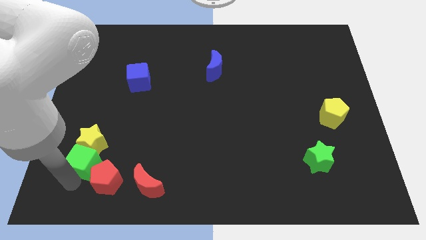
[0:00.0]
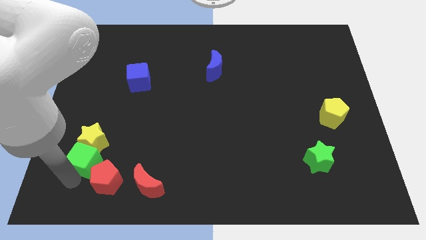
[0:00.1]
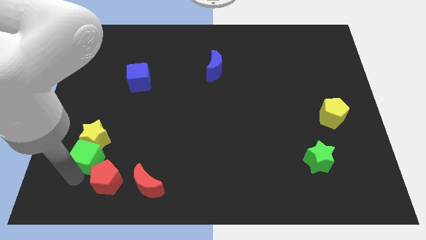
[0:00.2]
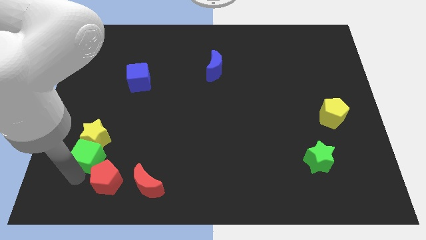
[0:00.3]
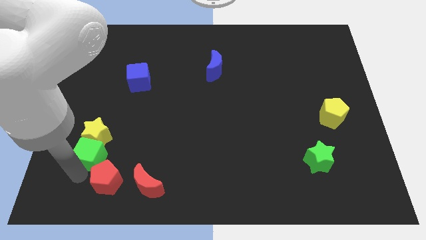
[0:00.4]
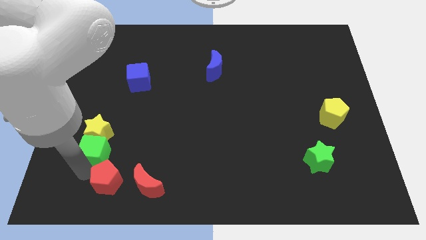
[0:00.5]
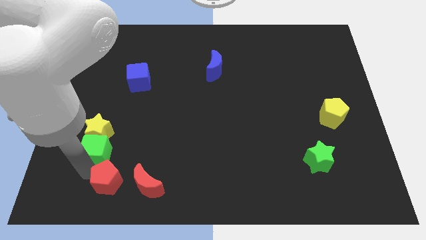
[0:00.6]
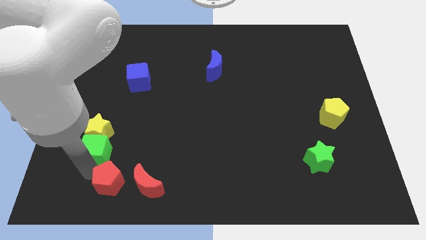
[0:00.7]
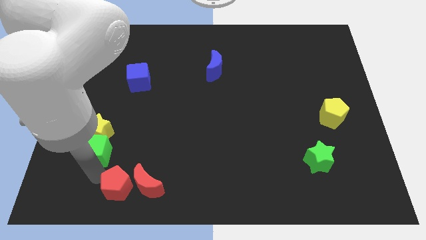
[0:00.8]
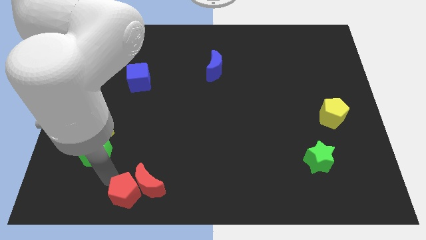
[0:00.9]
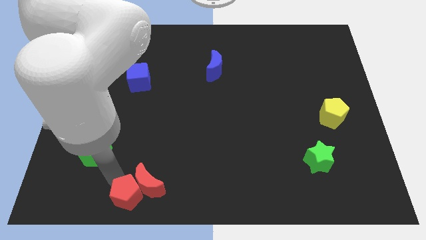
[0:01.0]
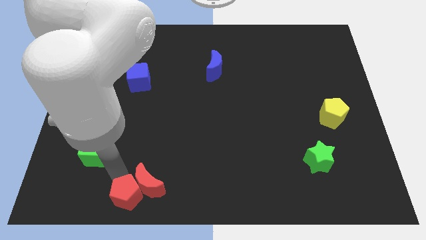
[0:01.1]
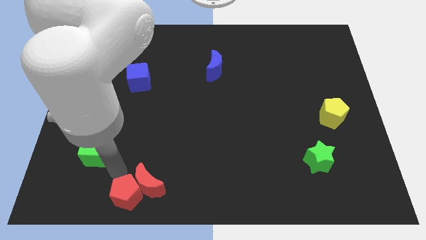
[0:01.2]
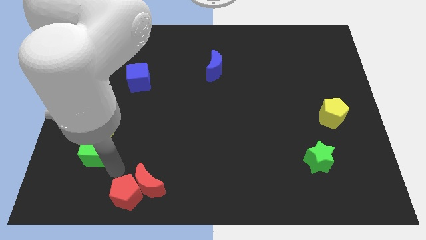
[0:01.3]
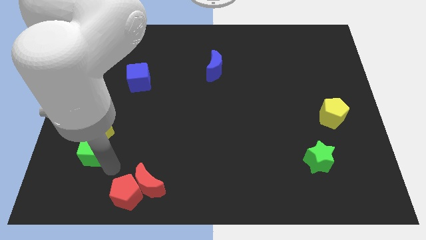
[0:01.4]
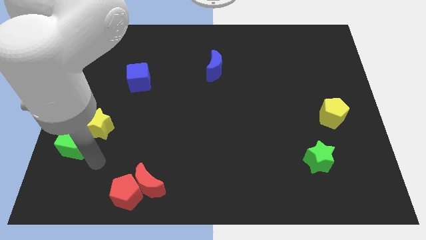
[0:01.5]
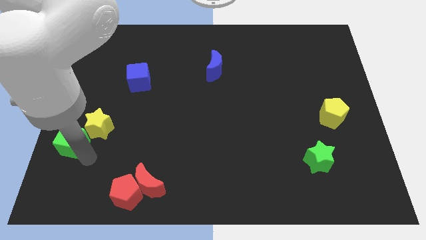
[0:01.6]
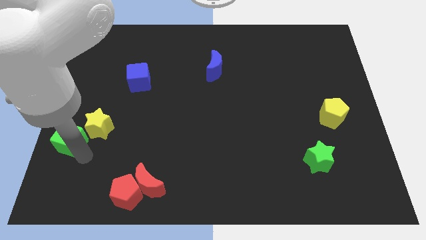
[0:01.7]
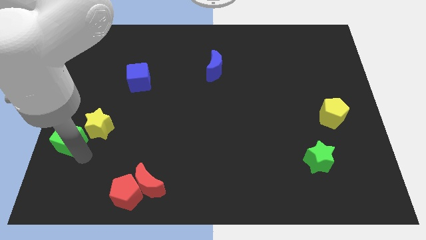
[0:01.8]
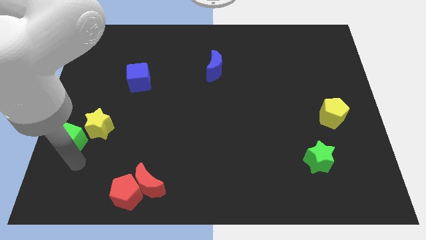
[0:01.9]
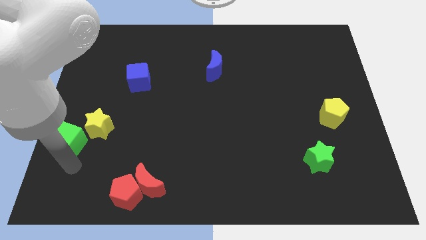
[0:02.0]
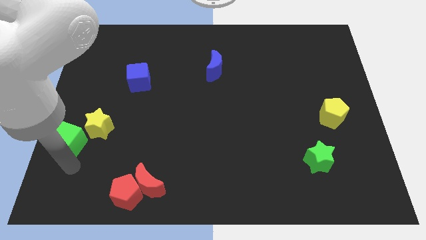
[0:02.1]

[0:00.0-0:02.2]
push the red pentagon into the red moon

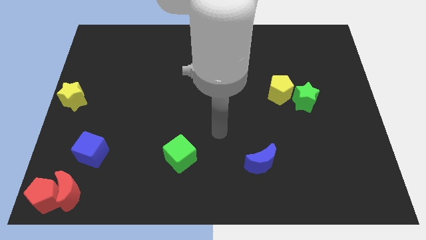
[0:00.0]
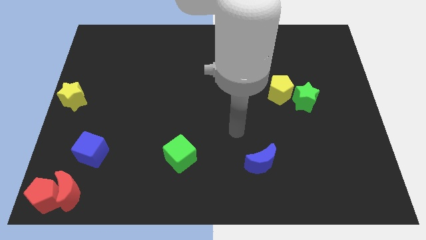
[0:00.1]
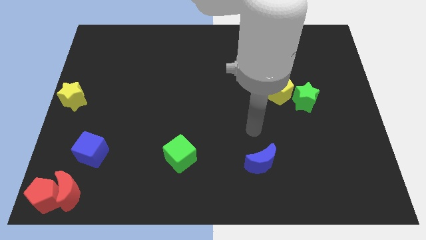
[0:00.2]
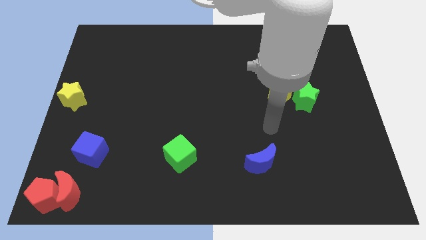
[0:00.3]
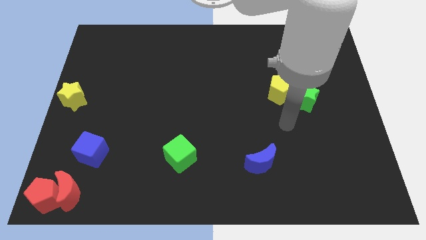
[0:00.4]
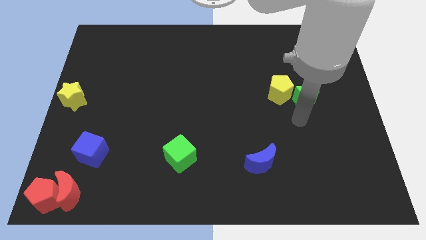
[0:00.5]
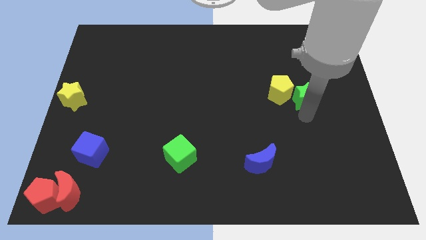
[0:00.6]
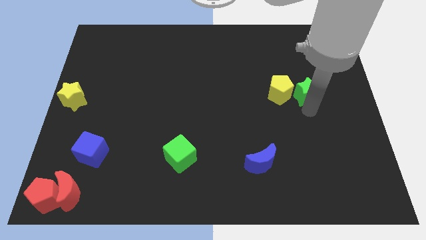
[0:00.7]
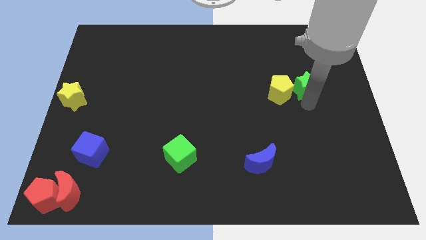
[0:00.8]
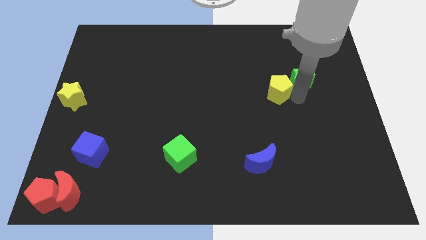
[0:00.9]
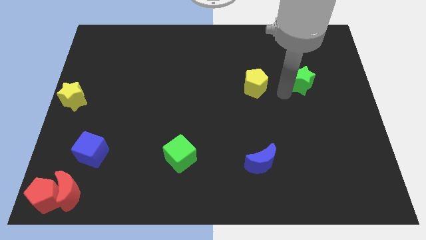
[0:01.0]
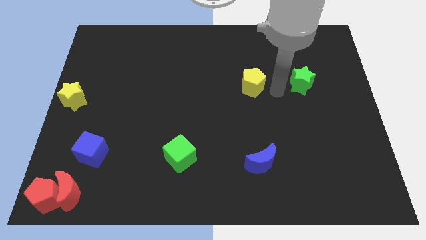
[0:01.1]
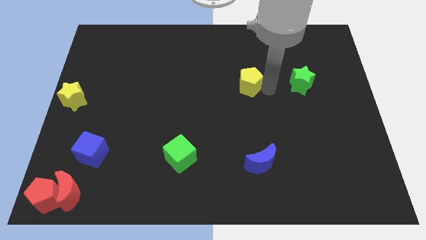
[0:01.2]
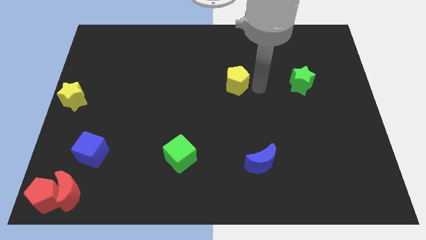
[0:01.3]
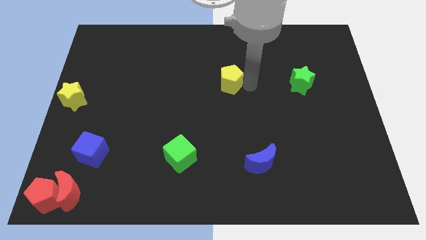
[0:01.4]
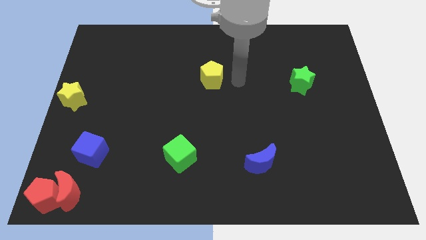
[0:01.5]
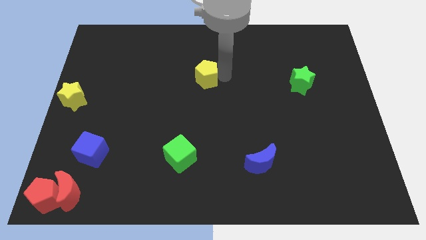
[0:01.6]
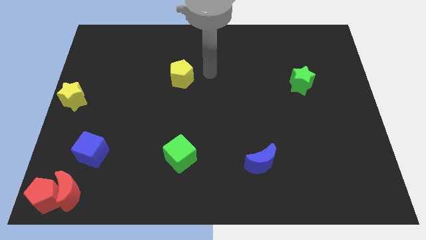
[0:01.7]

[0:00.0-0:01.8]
push the yellow pentagon vertically to the top side of the green cube

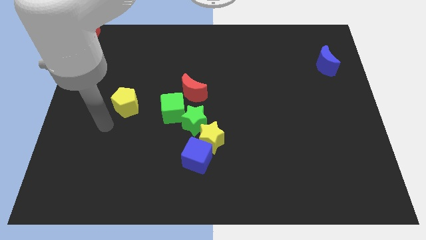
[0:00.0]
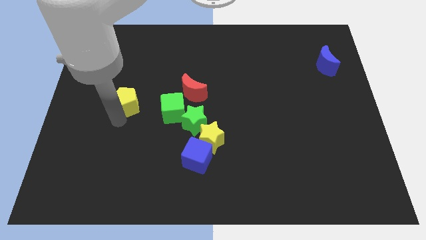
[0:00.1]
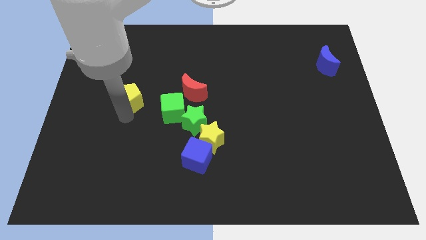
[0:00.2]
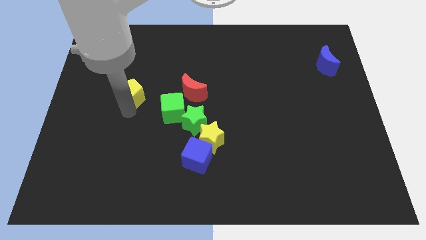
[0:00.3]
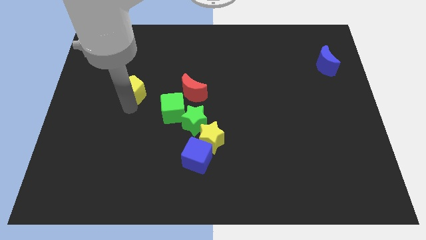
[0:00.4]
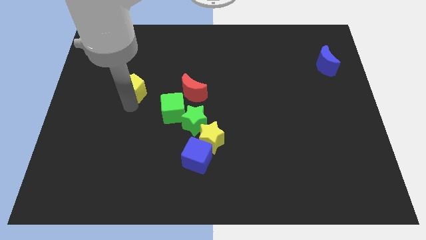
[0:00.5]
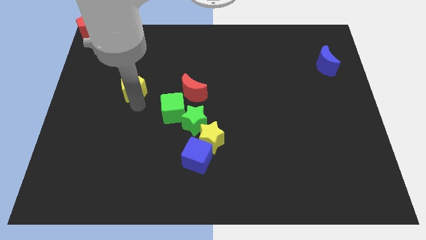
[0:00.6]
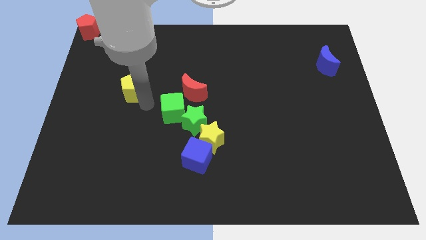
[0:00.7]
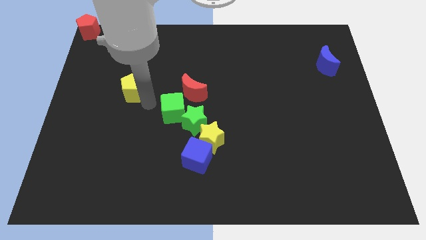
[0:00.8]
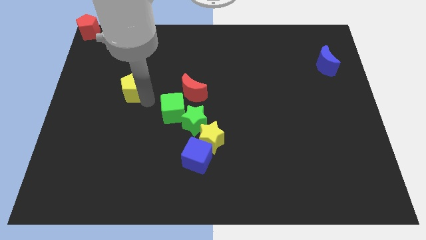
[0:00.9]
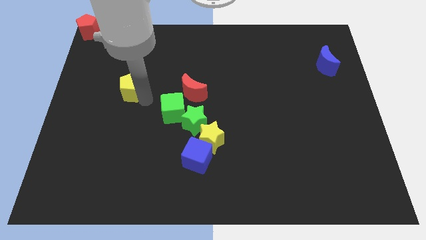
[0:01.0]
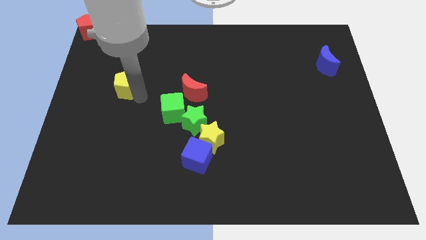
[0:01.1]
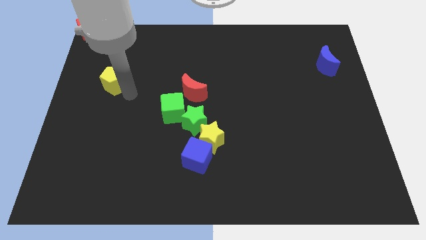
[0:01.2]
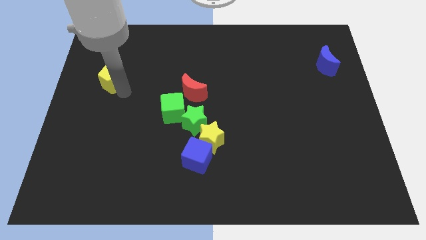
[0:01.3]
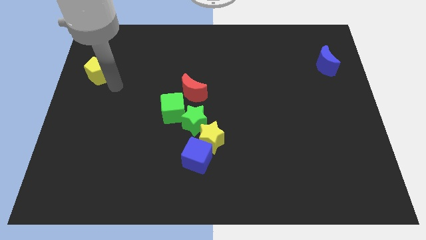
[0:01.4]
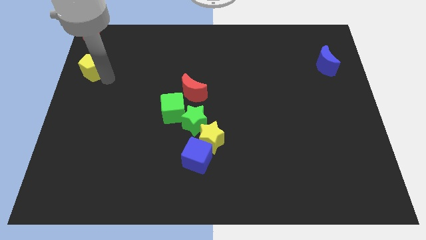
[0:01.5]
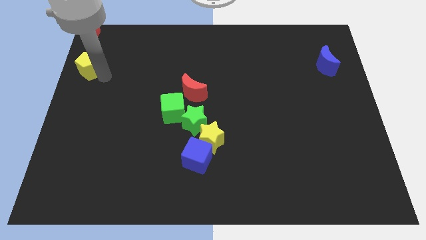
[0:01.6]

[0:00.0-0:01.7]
push the yellow pentagon closer to the red pentagon

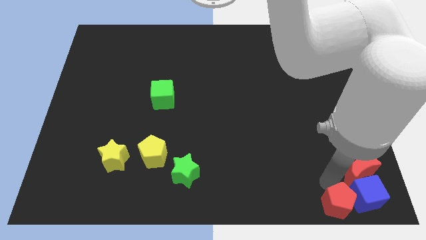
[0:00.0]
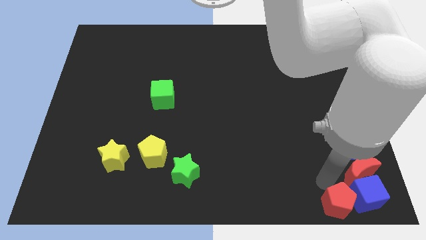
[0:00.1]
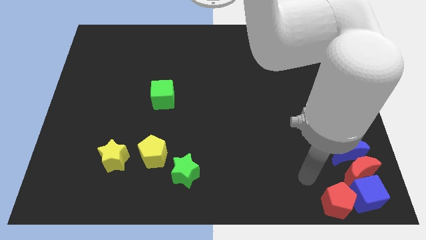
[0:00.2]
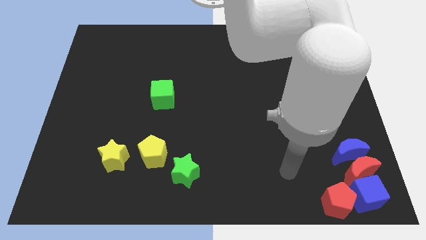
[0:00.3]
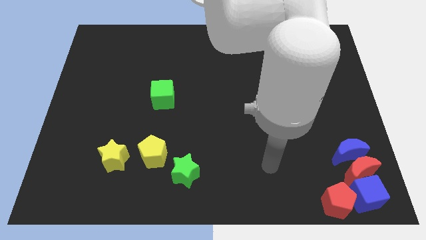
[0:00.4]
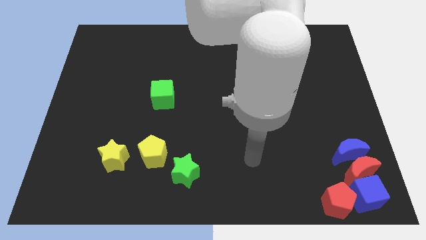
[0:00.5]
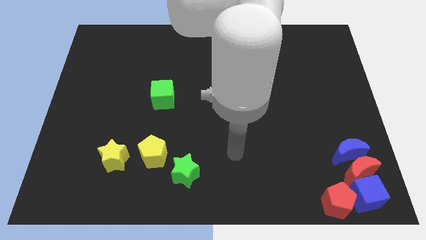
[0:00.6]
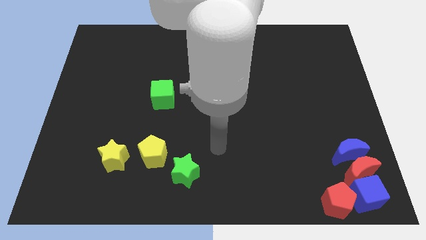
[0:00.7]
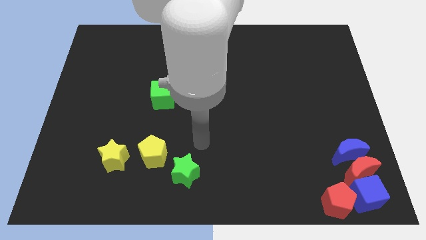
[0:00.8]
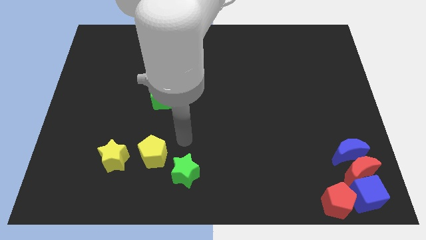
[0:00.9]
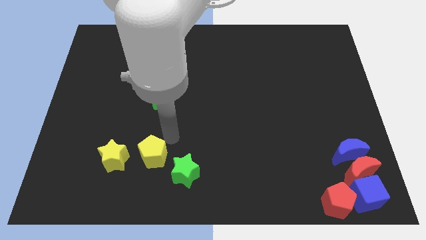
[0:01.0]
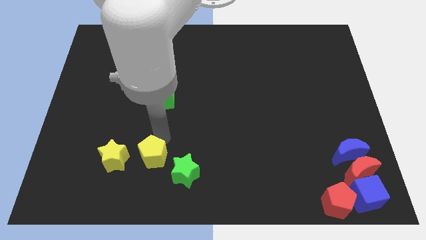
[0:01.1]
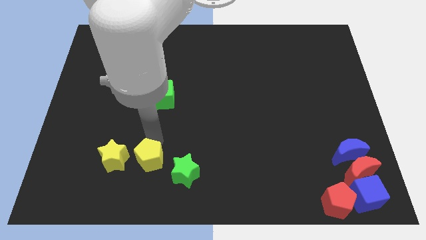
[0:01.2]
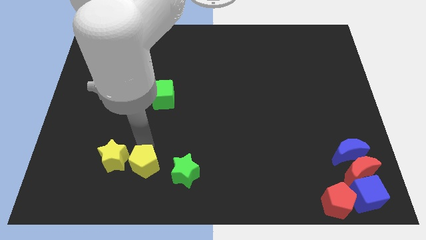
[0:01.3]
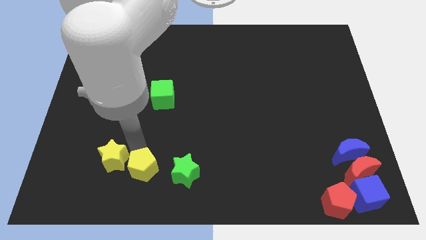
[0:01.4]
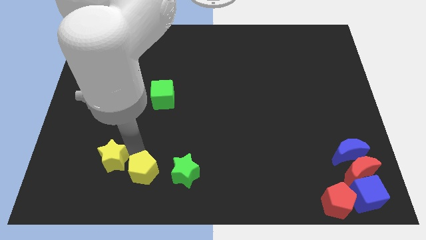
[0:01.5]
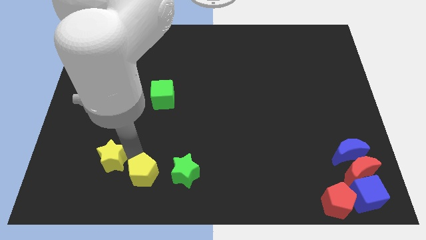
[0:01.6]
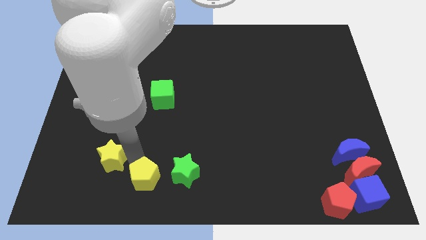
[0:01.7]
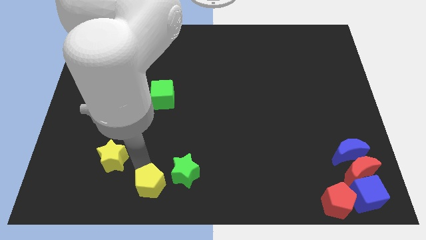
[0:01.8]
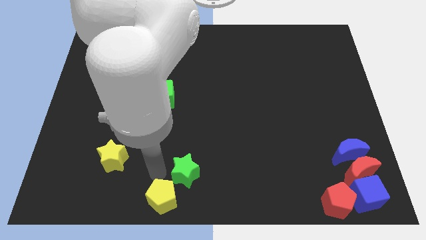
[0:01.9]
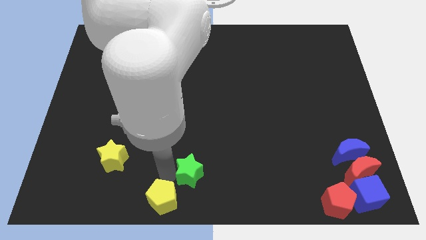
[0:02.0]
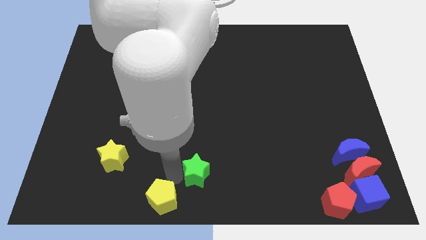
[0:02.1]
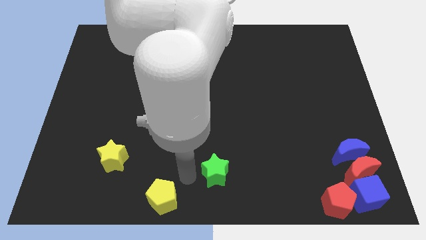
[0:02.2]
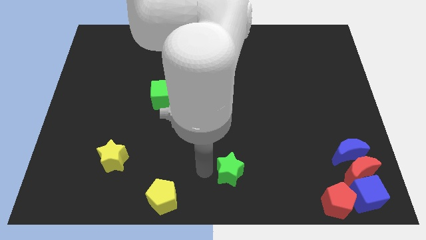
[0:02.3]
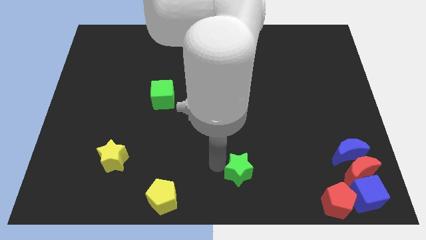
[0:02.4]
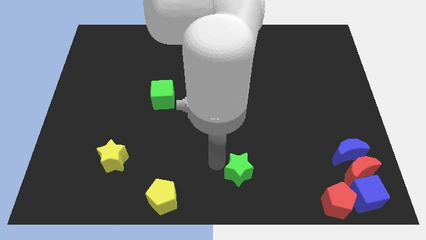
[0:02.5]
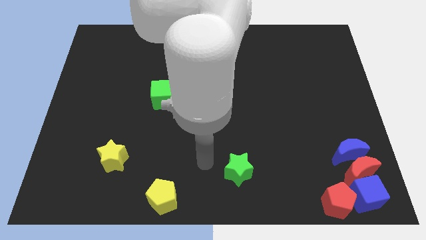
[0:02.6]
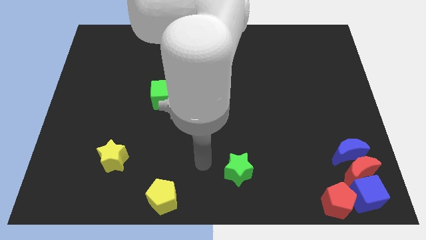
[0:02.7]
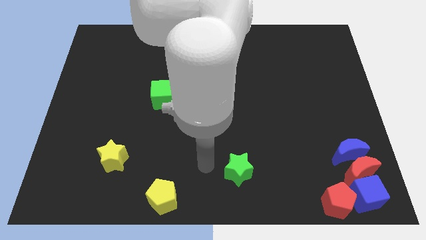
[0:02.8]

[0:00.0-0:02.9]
push the yellow pentagon diagonally bottom left to the green star

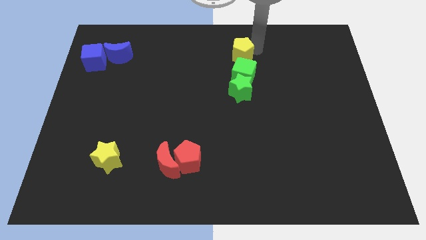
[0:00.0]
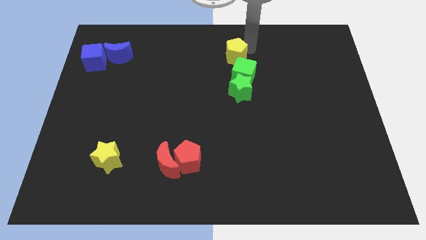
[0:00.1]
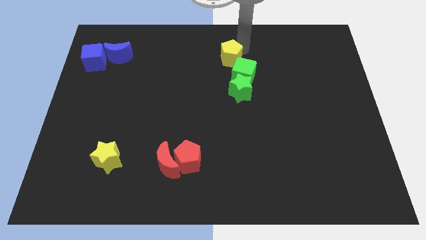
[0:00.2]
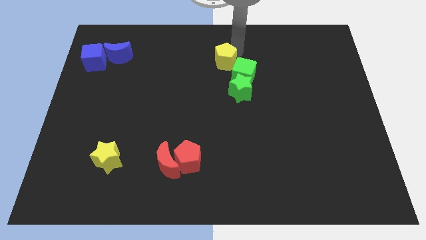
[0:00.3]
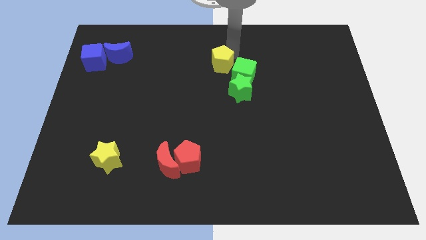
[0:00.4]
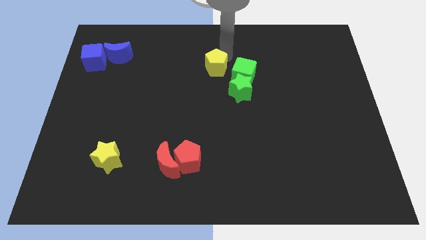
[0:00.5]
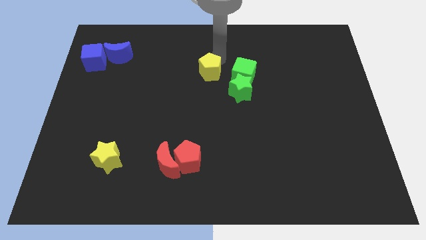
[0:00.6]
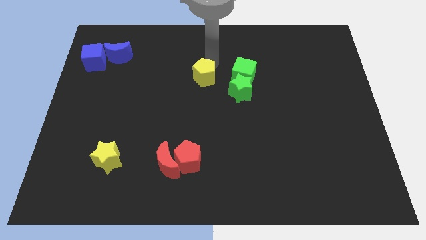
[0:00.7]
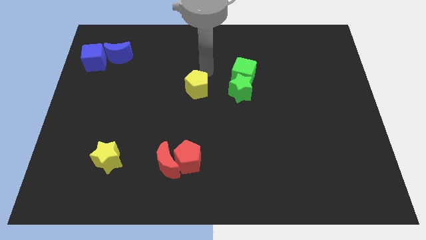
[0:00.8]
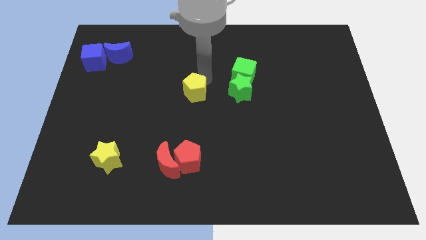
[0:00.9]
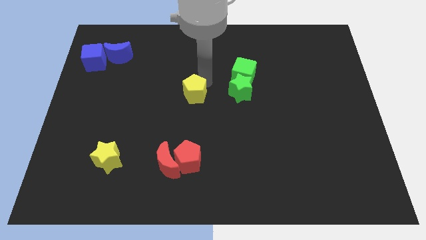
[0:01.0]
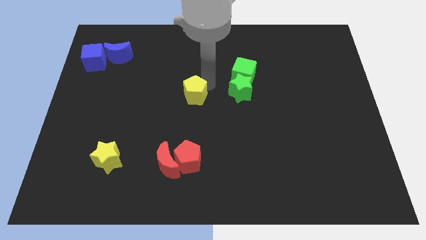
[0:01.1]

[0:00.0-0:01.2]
push the yellow pentagon downwards diagonally to the left
